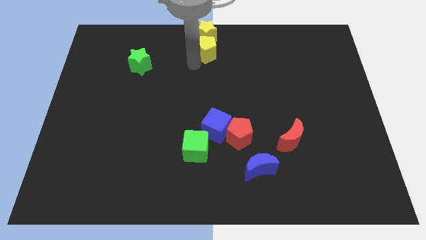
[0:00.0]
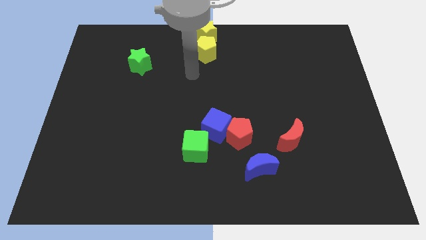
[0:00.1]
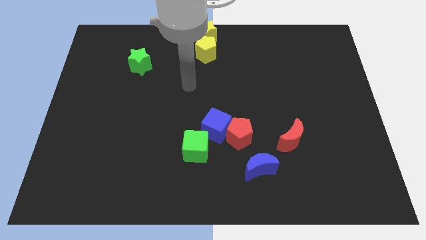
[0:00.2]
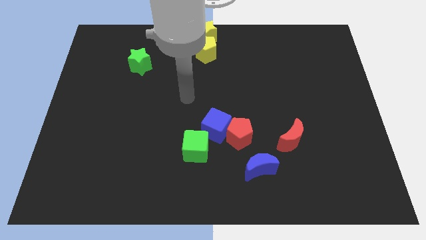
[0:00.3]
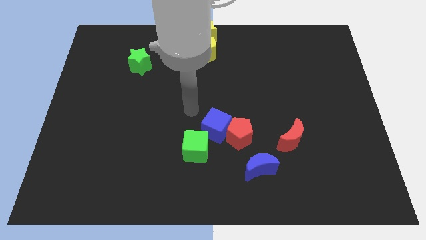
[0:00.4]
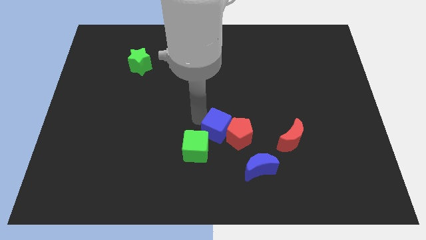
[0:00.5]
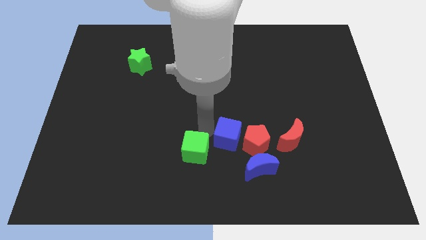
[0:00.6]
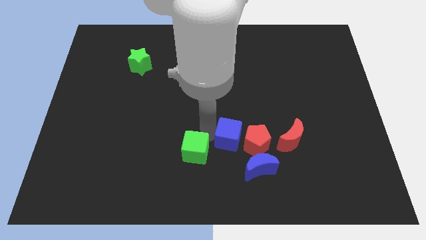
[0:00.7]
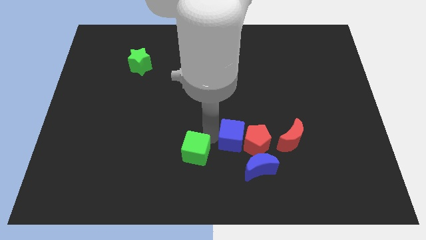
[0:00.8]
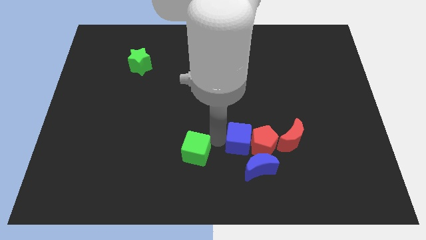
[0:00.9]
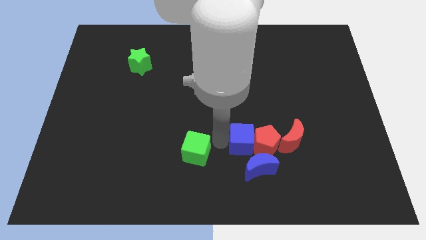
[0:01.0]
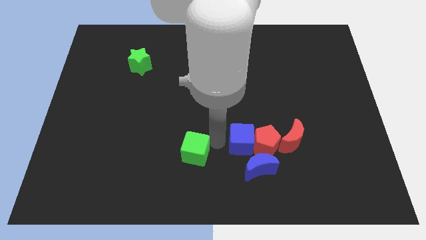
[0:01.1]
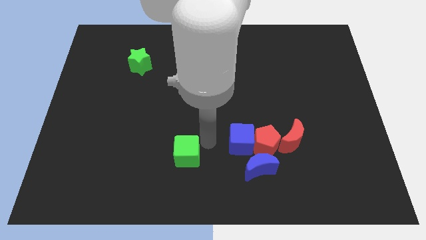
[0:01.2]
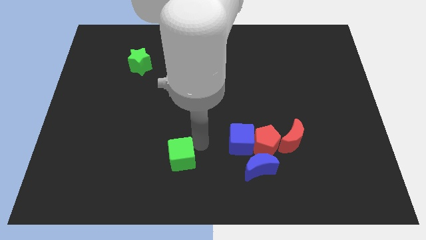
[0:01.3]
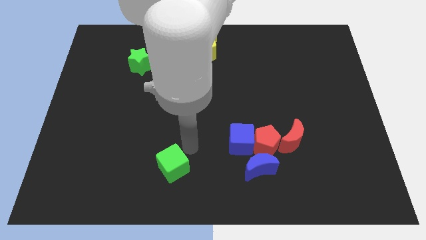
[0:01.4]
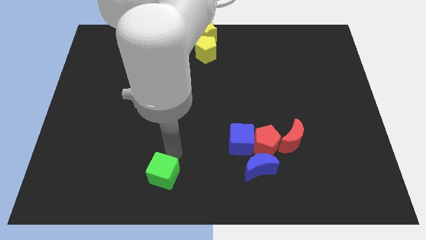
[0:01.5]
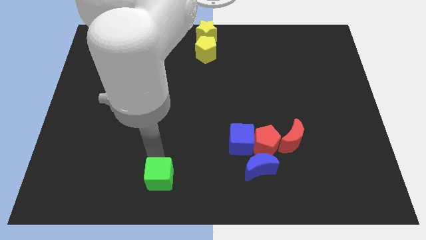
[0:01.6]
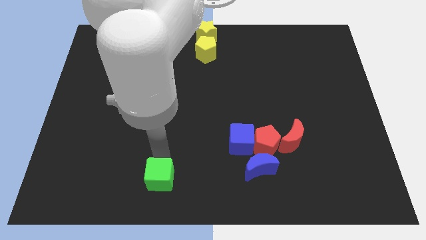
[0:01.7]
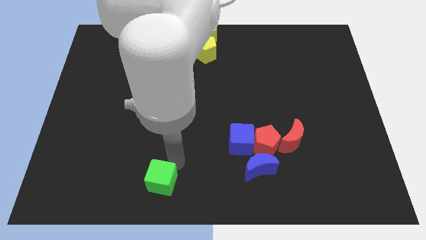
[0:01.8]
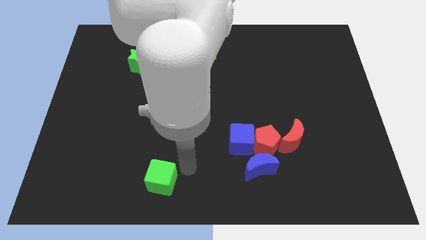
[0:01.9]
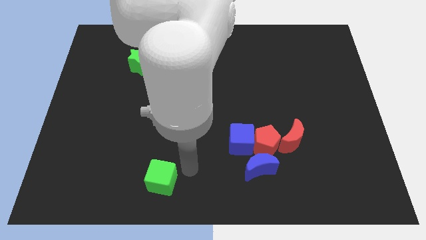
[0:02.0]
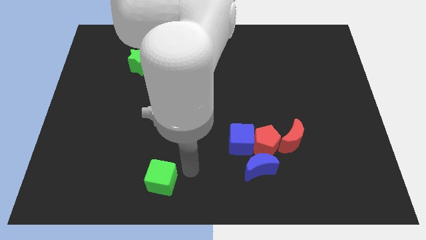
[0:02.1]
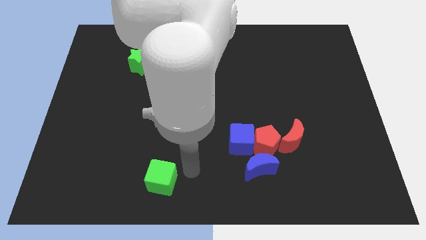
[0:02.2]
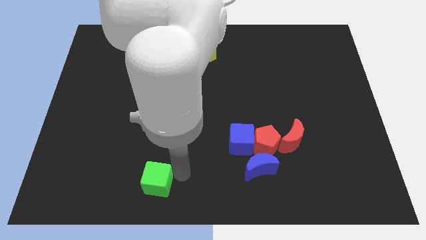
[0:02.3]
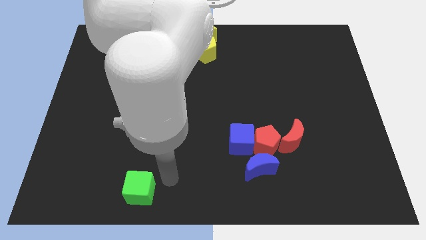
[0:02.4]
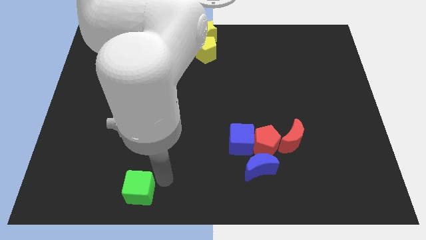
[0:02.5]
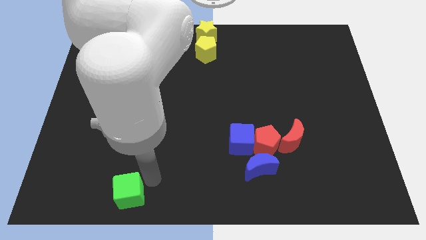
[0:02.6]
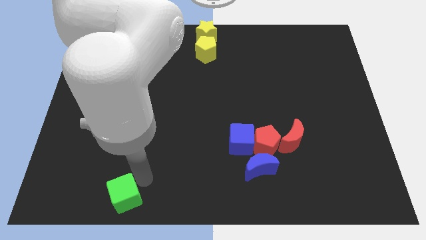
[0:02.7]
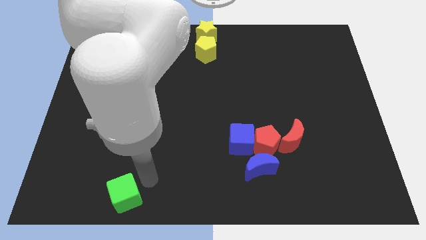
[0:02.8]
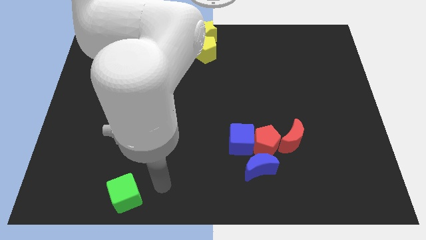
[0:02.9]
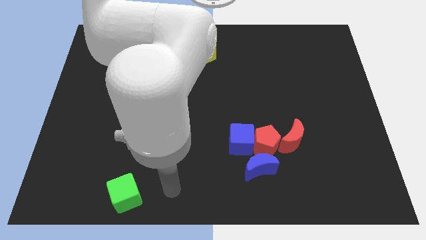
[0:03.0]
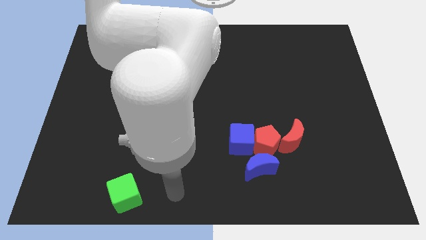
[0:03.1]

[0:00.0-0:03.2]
separate the green cube from blue cube

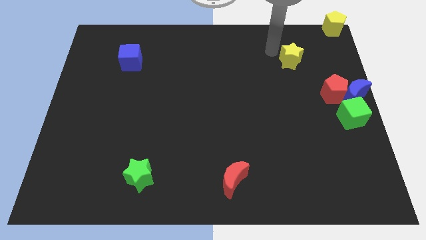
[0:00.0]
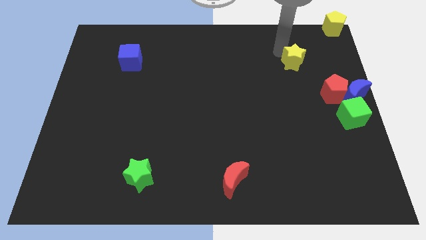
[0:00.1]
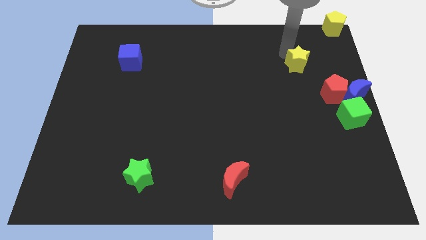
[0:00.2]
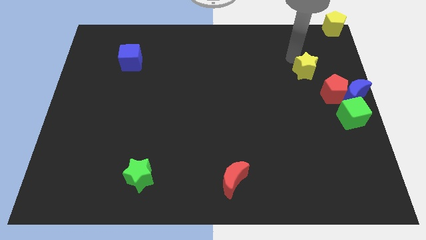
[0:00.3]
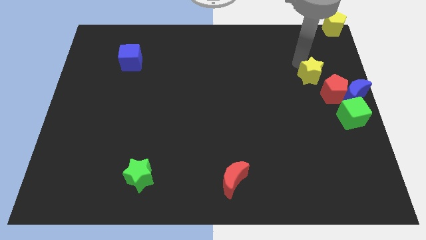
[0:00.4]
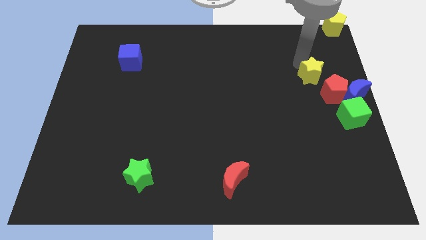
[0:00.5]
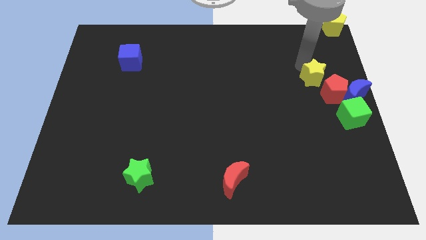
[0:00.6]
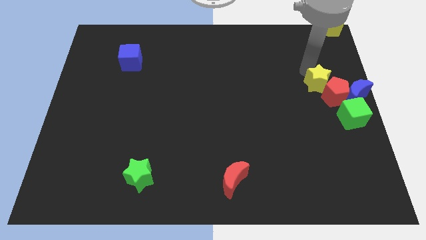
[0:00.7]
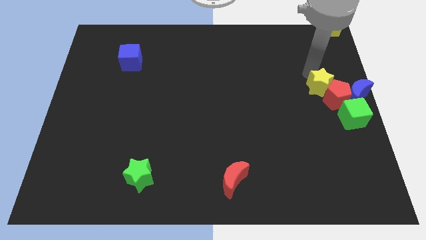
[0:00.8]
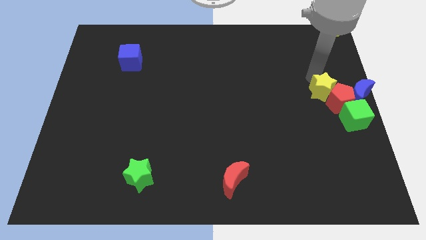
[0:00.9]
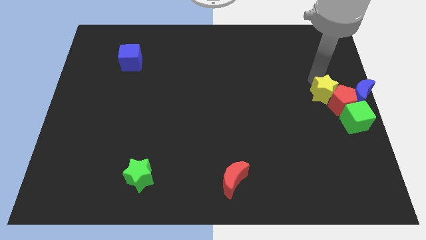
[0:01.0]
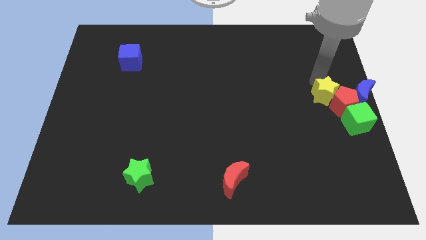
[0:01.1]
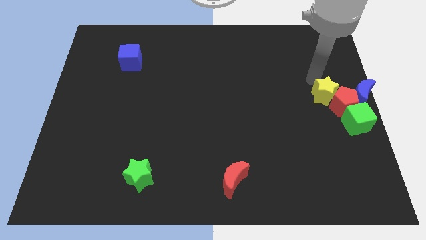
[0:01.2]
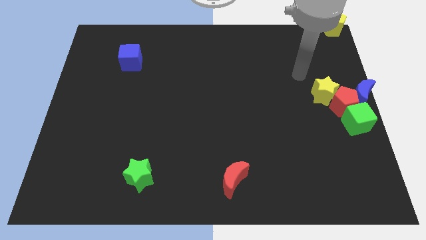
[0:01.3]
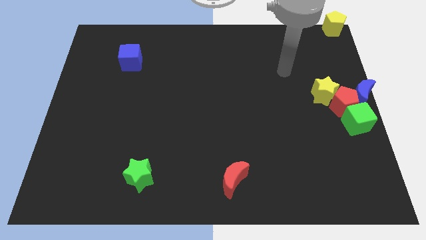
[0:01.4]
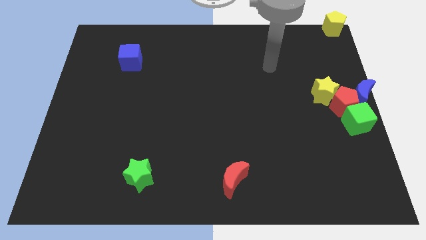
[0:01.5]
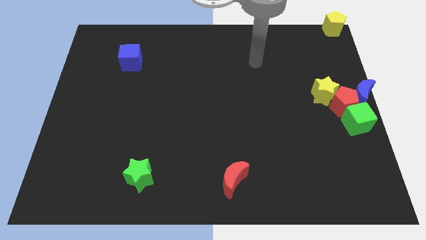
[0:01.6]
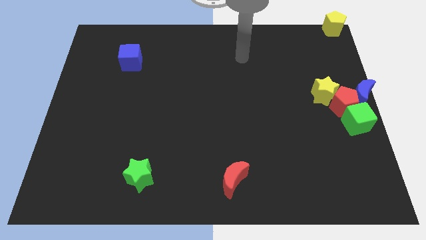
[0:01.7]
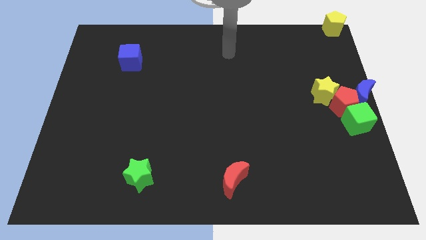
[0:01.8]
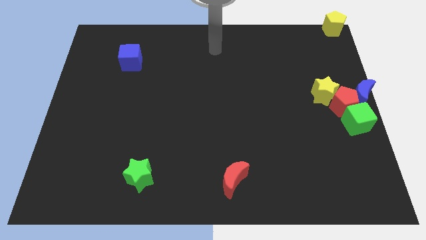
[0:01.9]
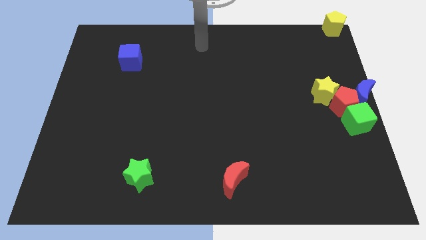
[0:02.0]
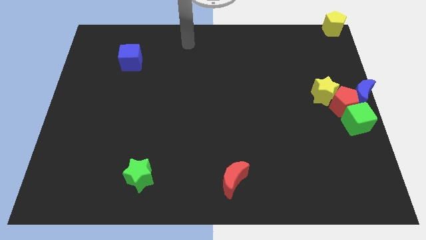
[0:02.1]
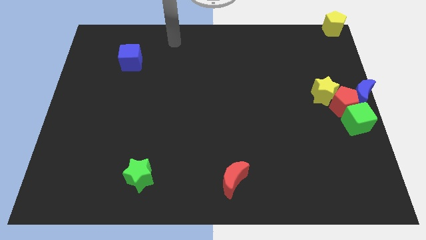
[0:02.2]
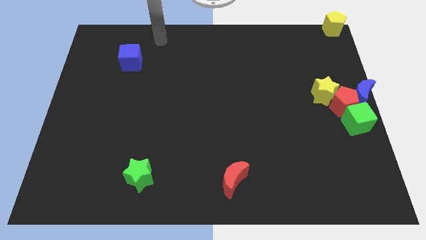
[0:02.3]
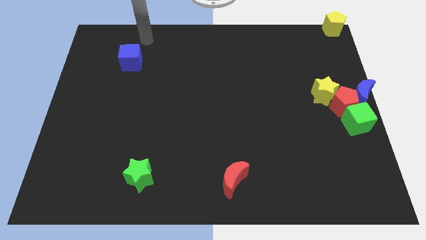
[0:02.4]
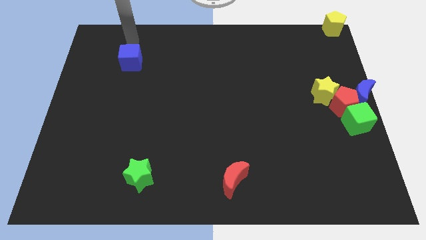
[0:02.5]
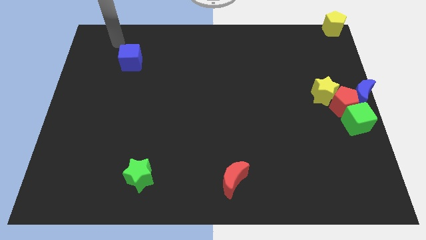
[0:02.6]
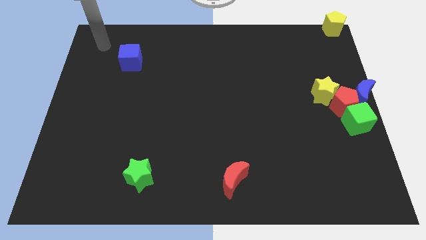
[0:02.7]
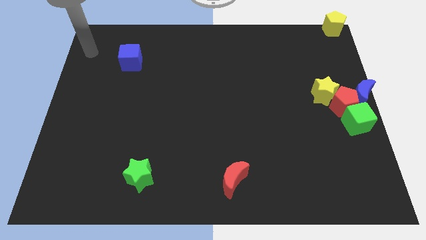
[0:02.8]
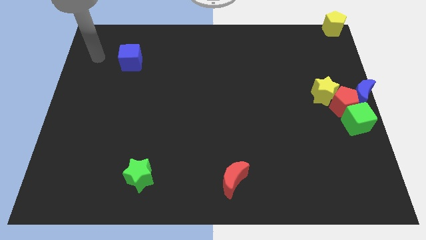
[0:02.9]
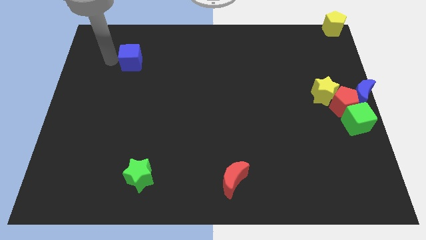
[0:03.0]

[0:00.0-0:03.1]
place the arm left to the blue cube

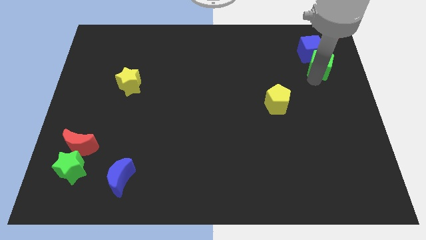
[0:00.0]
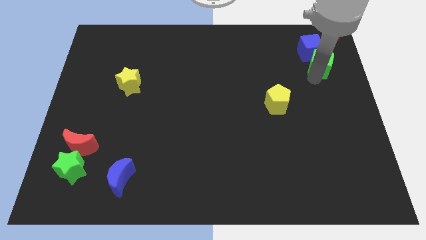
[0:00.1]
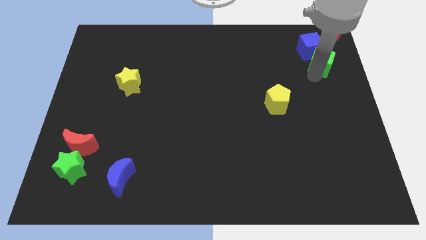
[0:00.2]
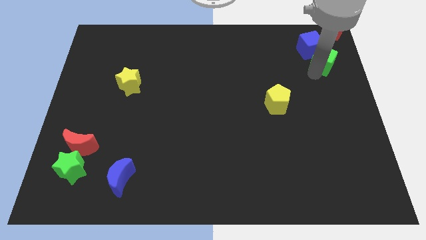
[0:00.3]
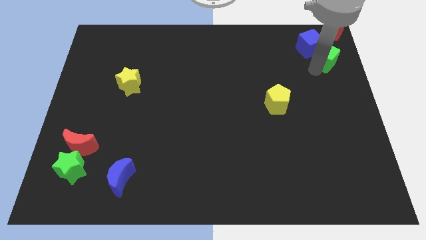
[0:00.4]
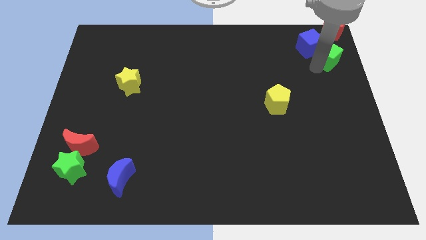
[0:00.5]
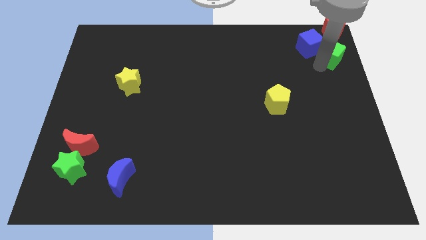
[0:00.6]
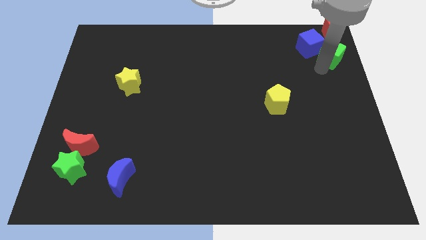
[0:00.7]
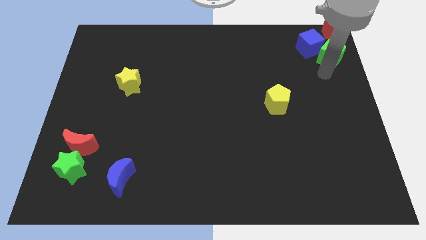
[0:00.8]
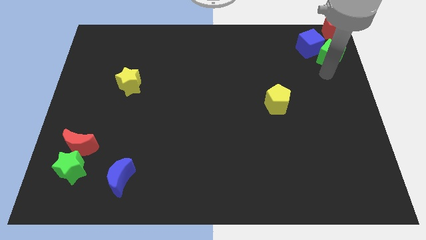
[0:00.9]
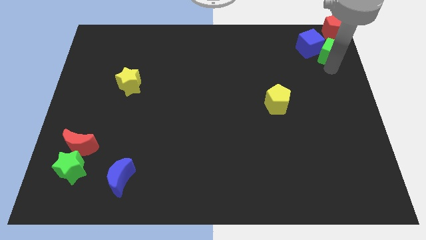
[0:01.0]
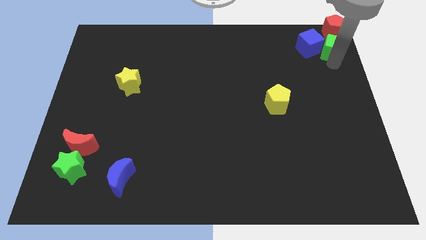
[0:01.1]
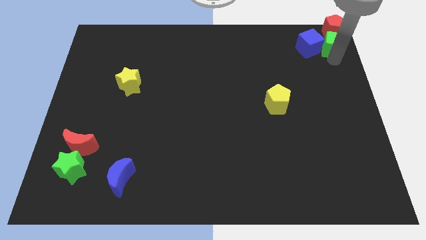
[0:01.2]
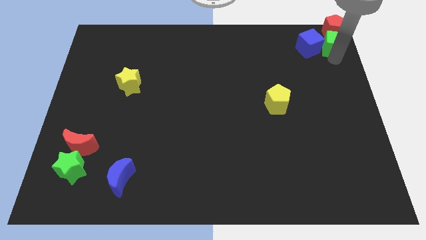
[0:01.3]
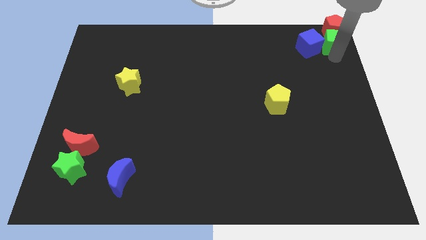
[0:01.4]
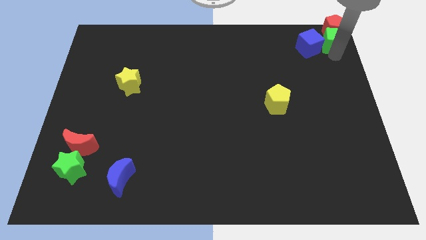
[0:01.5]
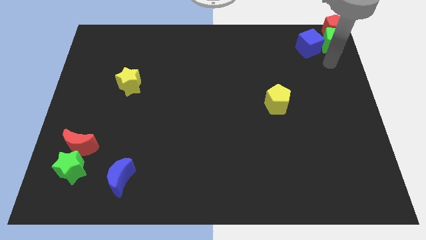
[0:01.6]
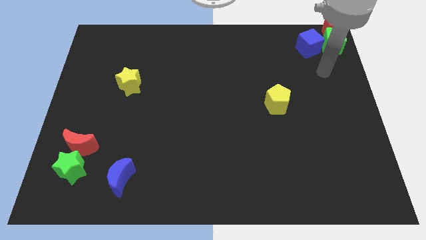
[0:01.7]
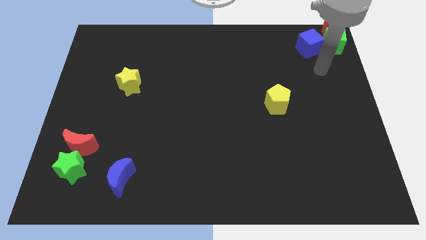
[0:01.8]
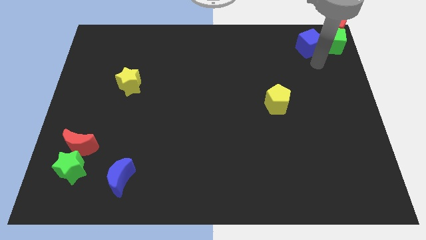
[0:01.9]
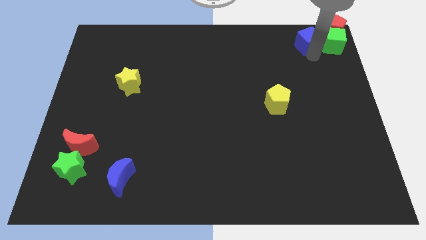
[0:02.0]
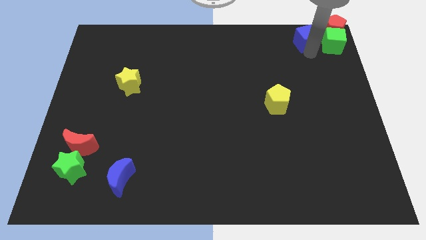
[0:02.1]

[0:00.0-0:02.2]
place green cube to the bottom of the red pentagon

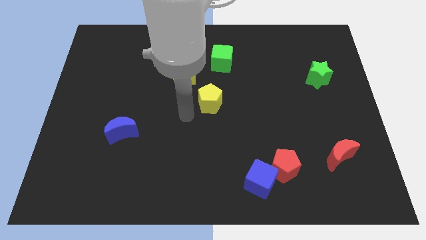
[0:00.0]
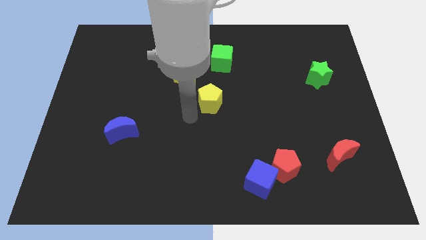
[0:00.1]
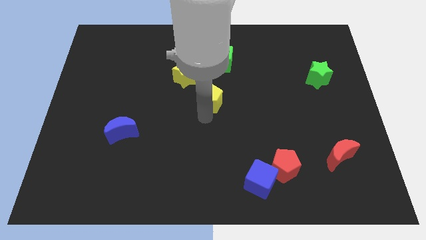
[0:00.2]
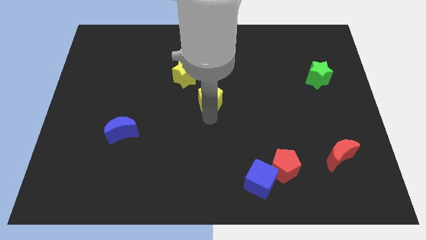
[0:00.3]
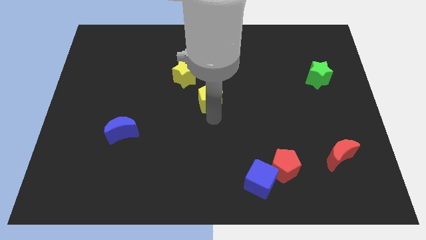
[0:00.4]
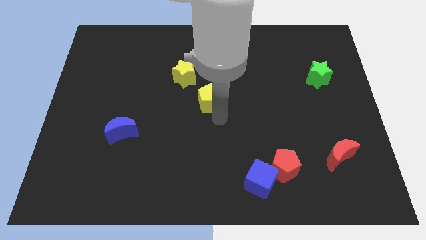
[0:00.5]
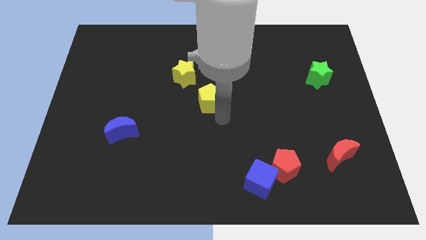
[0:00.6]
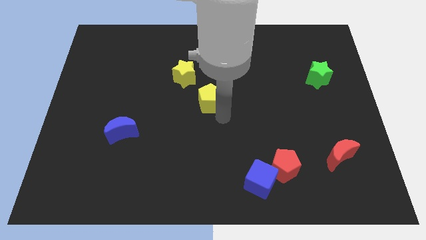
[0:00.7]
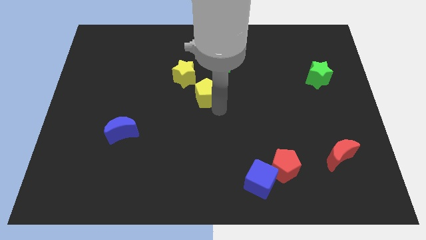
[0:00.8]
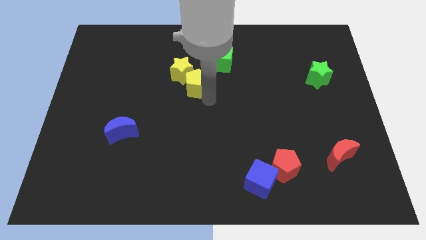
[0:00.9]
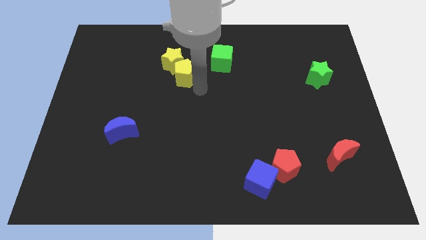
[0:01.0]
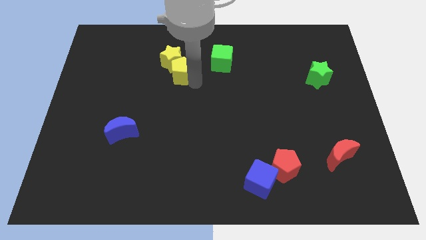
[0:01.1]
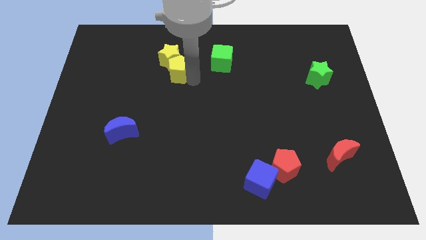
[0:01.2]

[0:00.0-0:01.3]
push the yellow pentagon into the yellow star
